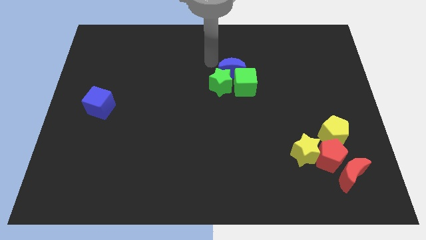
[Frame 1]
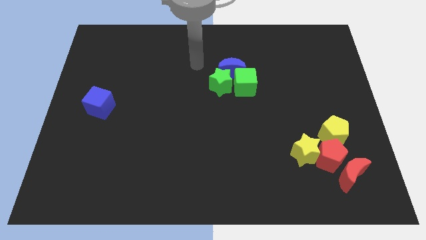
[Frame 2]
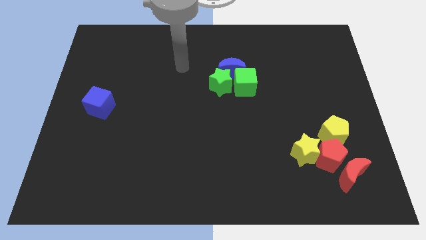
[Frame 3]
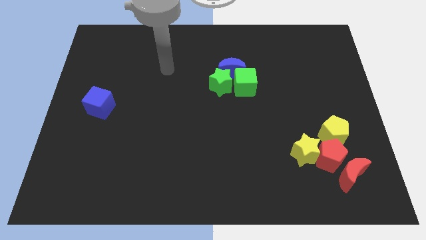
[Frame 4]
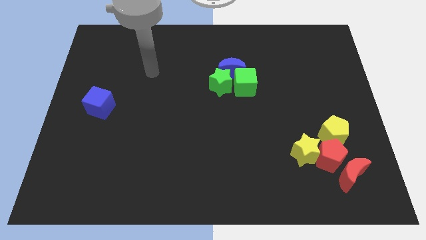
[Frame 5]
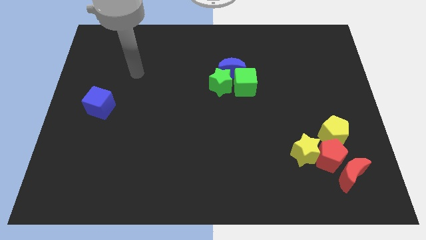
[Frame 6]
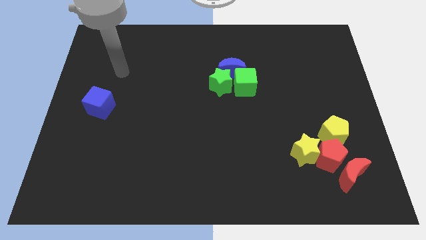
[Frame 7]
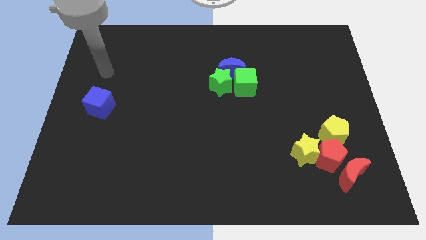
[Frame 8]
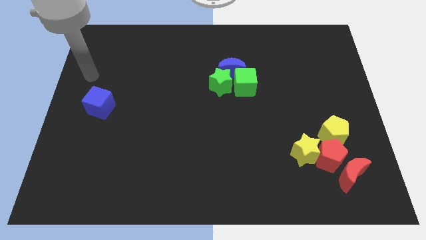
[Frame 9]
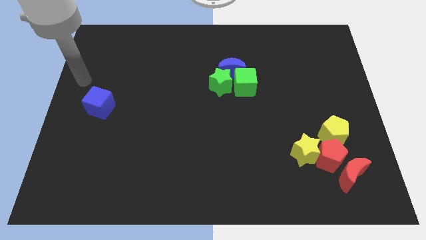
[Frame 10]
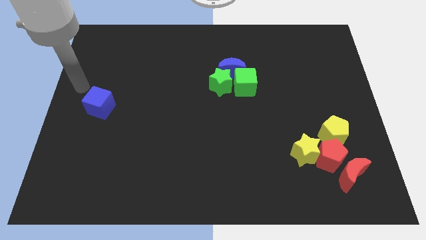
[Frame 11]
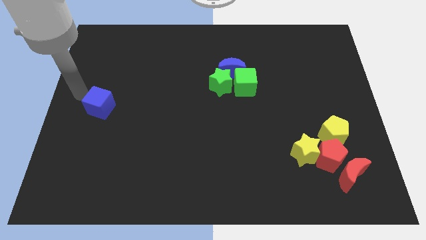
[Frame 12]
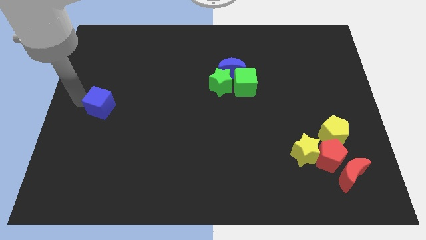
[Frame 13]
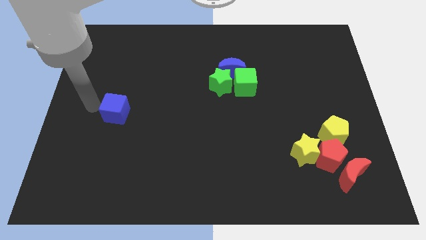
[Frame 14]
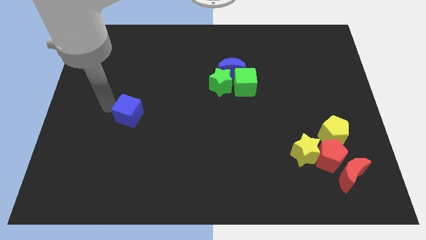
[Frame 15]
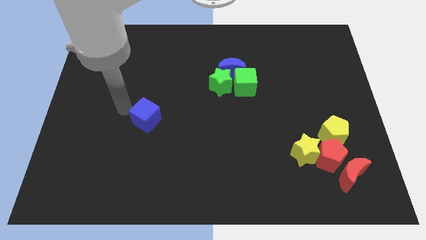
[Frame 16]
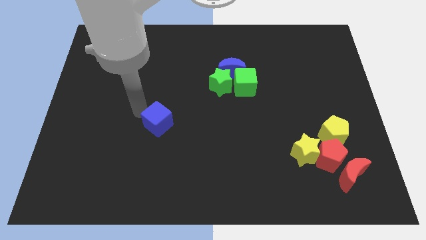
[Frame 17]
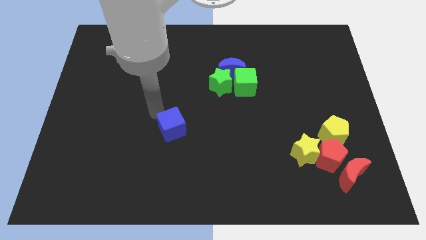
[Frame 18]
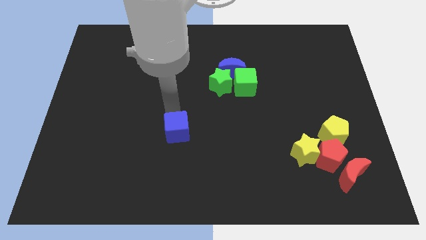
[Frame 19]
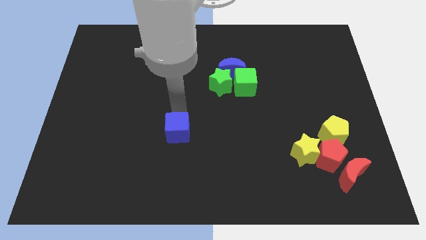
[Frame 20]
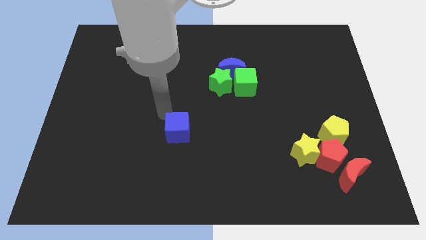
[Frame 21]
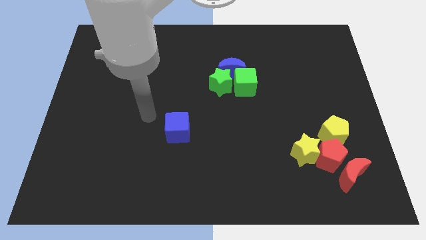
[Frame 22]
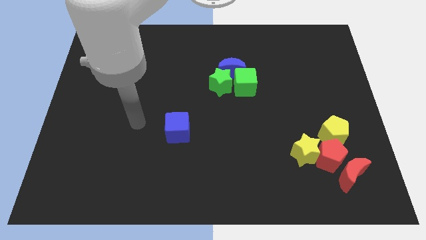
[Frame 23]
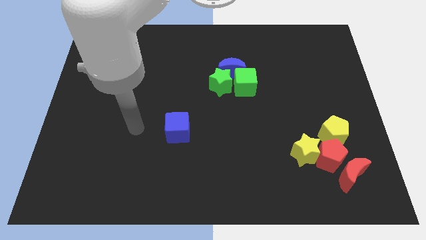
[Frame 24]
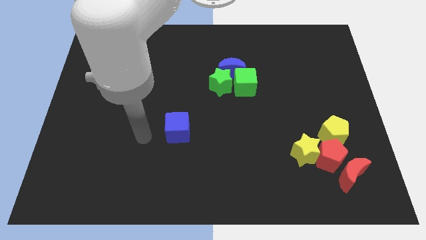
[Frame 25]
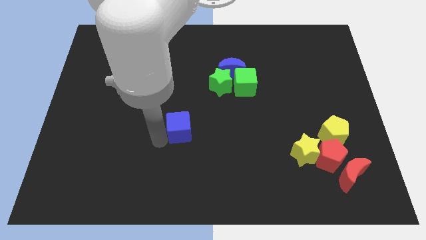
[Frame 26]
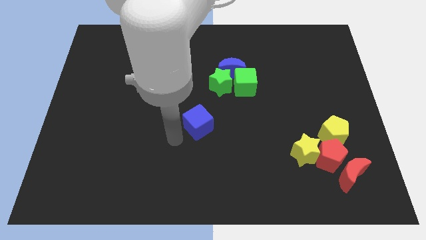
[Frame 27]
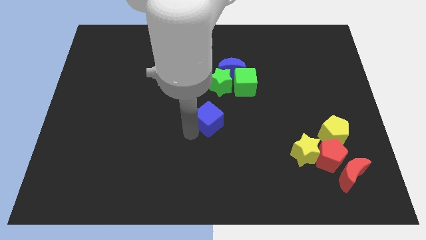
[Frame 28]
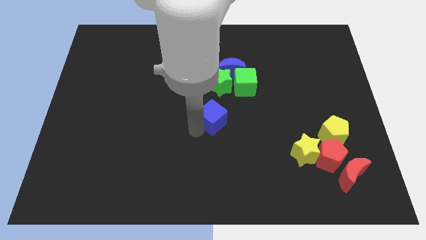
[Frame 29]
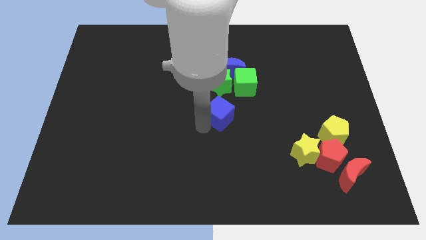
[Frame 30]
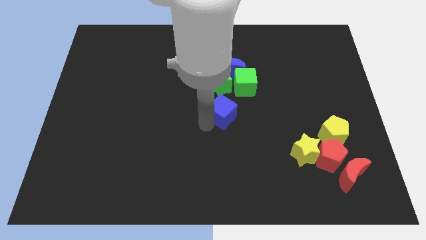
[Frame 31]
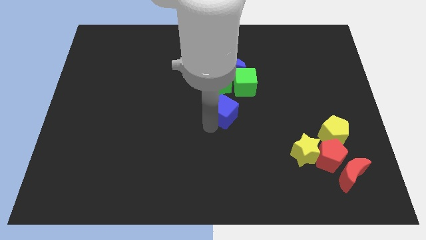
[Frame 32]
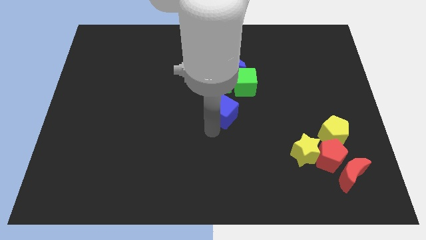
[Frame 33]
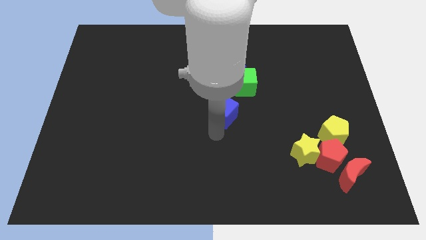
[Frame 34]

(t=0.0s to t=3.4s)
place the blue cube below the green blocks

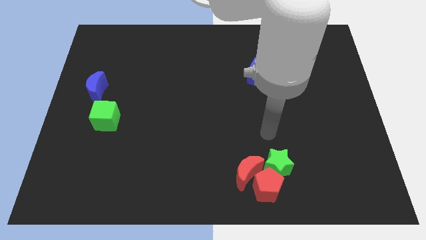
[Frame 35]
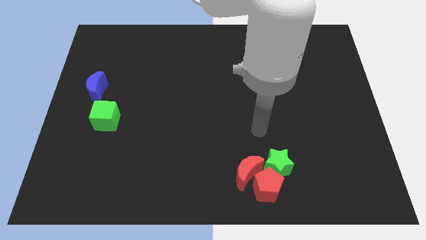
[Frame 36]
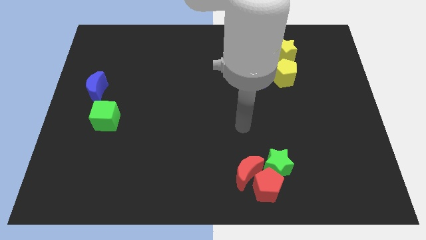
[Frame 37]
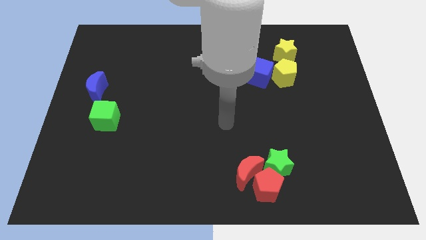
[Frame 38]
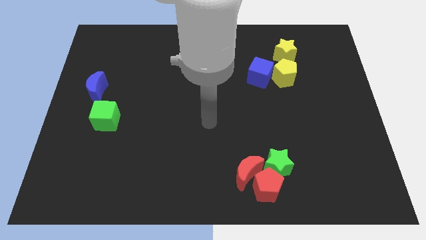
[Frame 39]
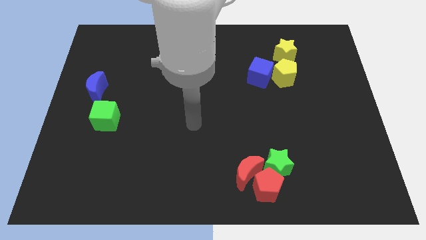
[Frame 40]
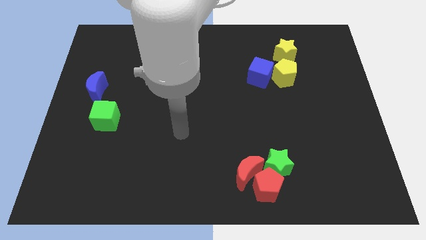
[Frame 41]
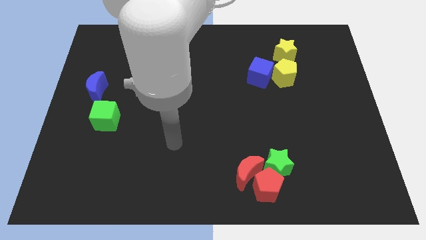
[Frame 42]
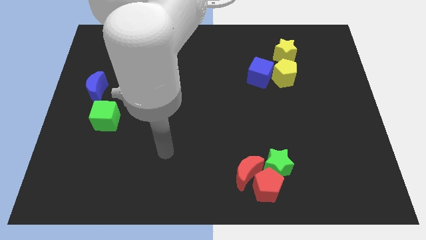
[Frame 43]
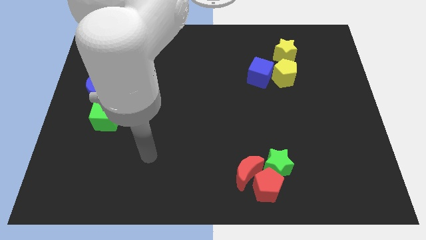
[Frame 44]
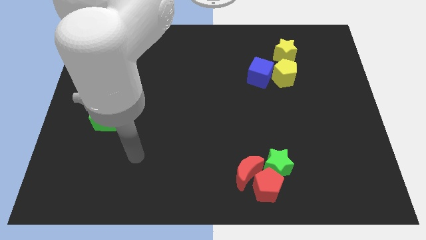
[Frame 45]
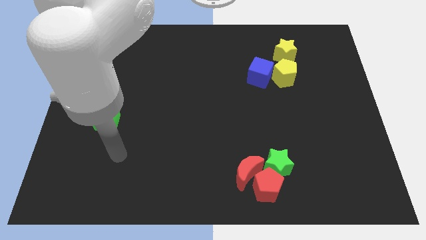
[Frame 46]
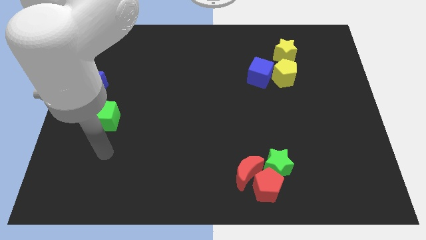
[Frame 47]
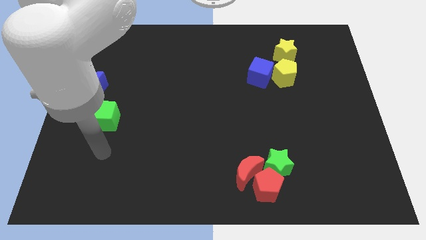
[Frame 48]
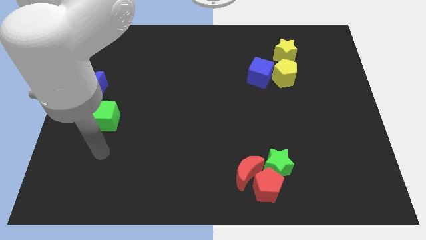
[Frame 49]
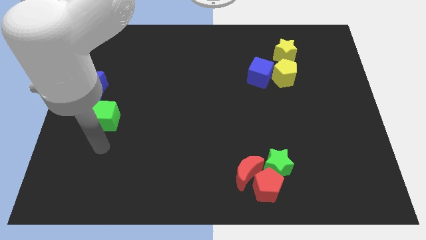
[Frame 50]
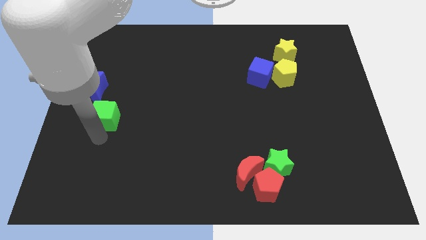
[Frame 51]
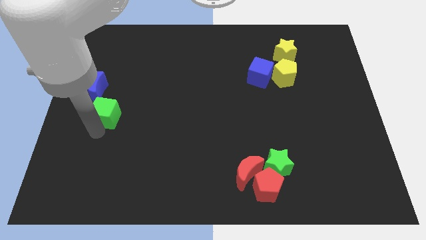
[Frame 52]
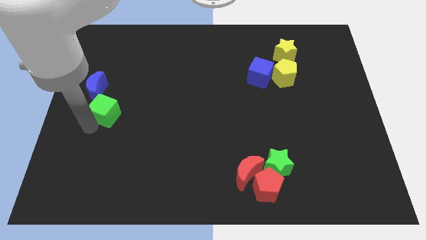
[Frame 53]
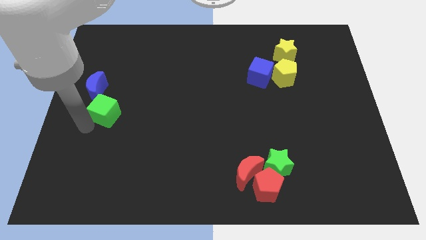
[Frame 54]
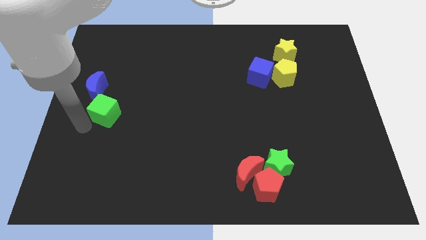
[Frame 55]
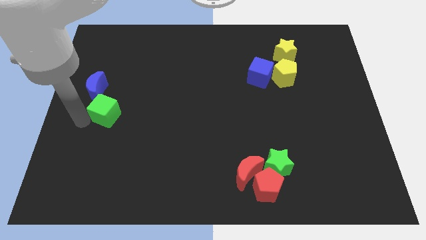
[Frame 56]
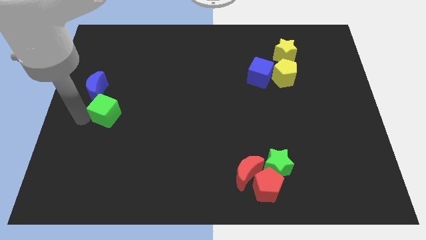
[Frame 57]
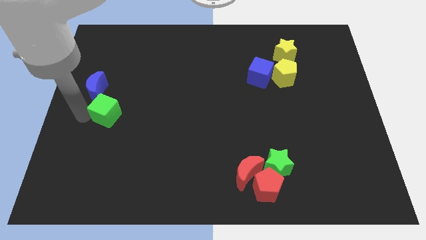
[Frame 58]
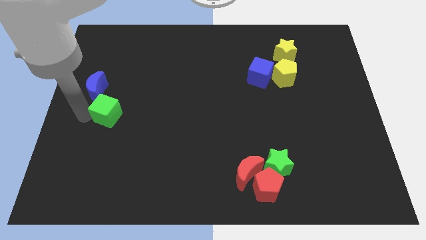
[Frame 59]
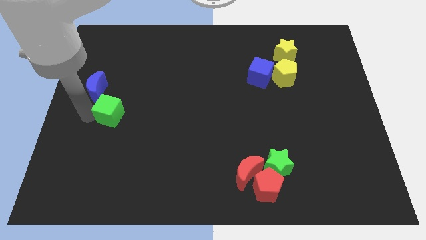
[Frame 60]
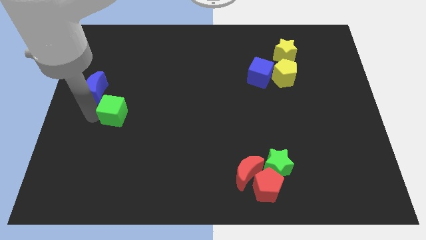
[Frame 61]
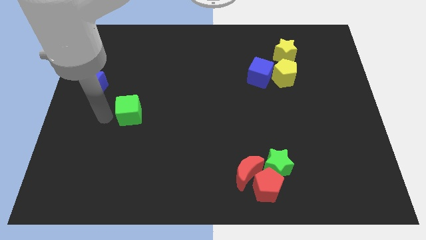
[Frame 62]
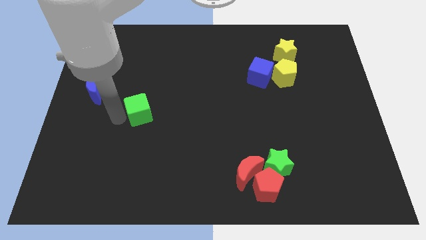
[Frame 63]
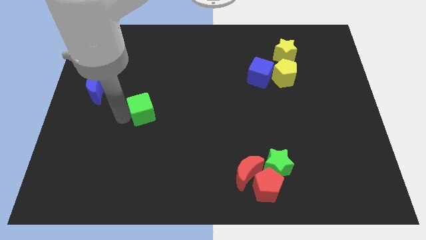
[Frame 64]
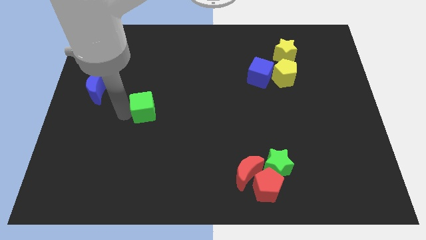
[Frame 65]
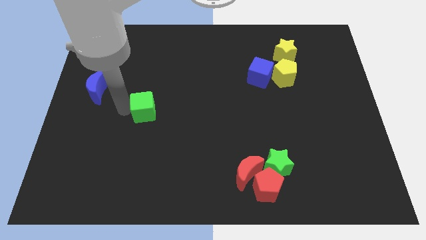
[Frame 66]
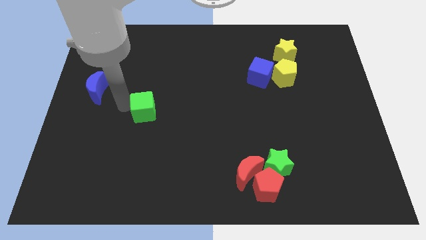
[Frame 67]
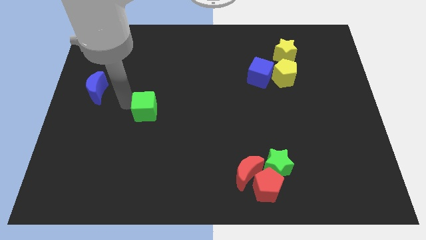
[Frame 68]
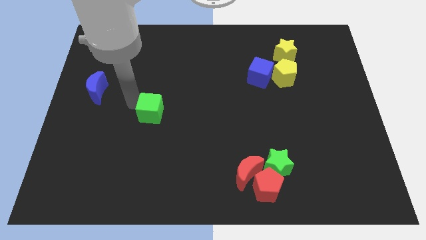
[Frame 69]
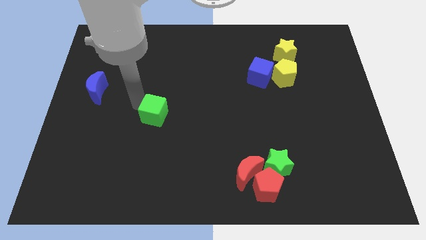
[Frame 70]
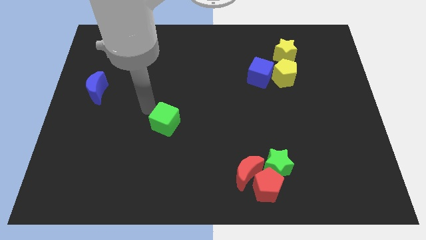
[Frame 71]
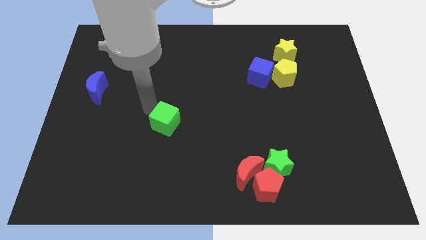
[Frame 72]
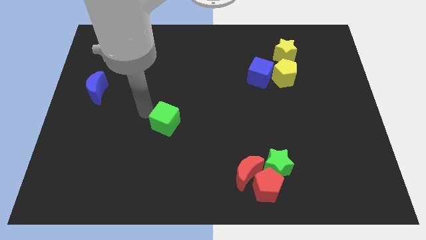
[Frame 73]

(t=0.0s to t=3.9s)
move the green cube to the center of the board

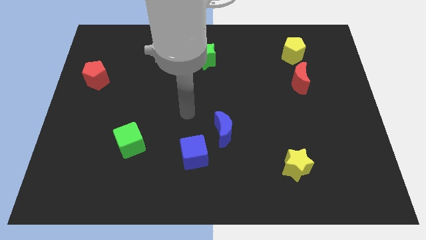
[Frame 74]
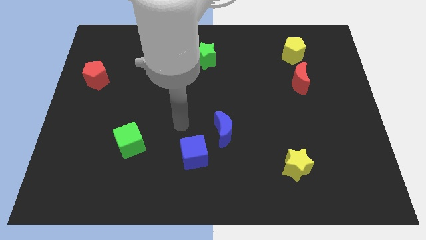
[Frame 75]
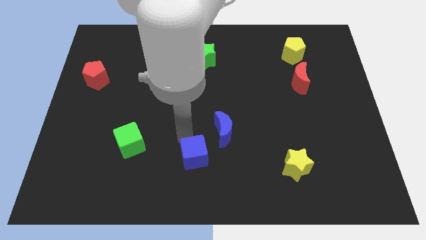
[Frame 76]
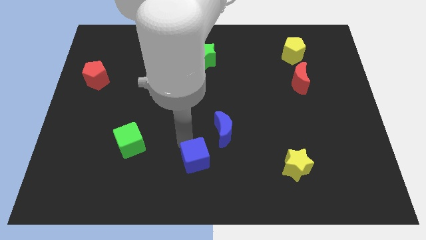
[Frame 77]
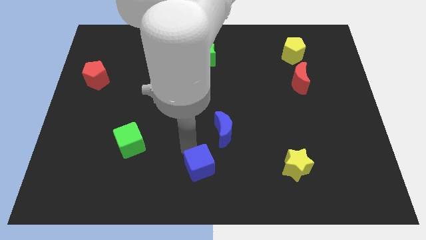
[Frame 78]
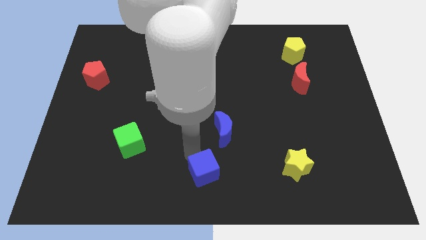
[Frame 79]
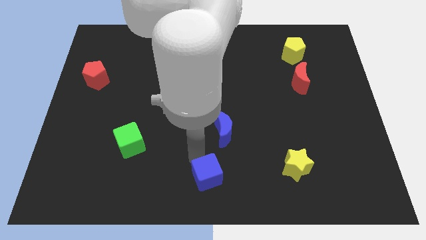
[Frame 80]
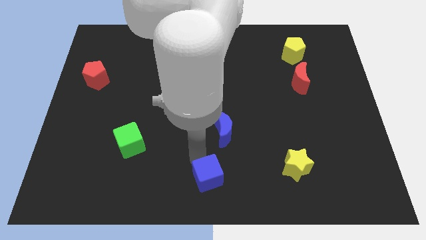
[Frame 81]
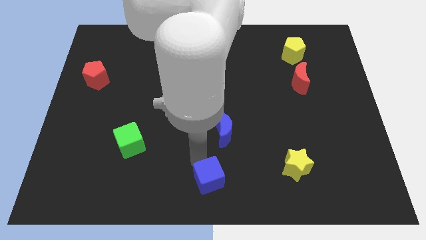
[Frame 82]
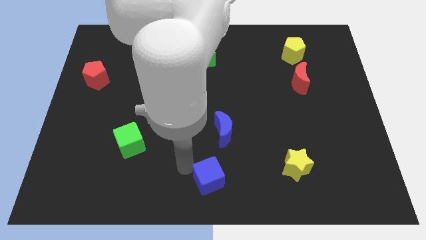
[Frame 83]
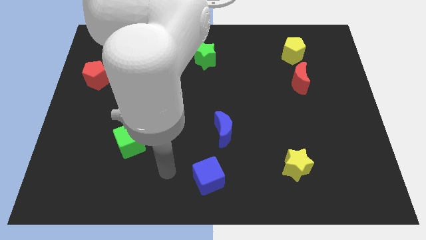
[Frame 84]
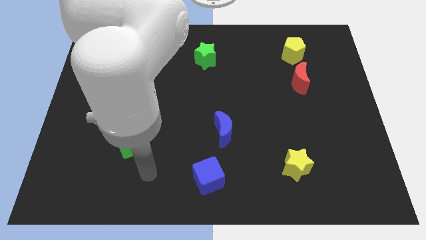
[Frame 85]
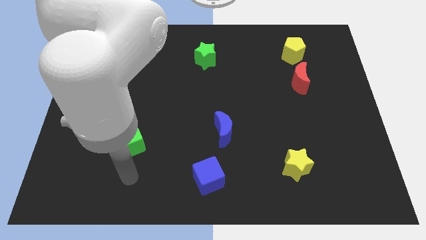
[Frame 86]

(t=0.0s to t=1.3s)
move the blue cube to the bottom side of the blue moon

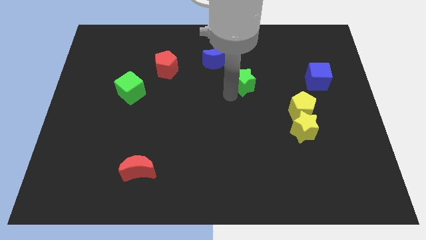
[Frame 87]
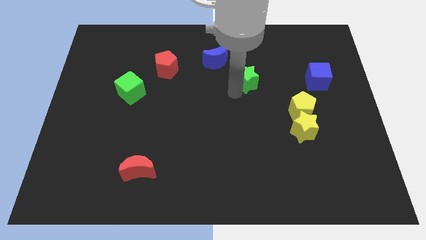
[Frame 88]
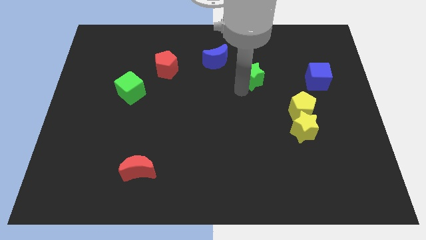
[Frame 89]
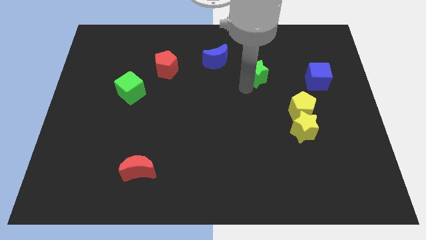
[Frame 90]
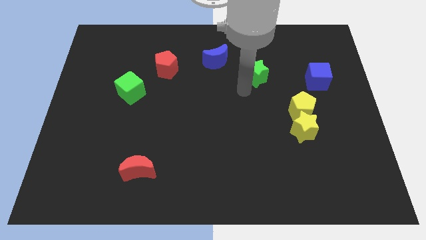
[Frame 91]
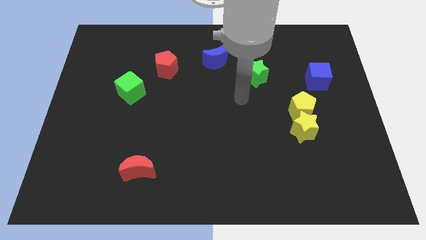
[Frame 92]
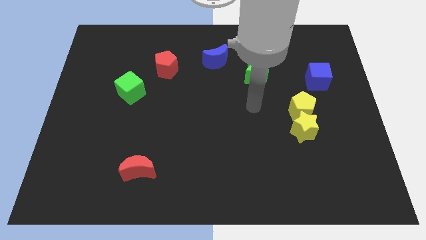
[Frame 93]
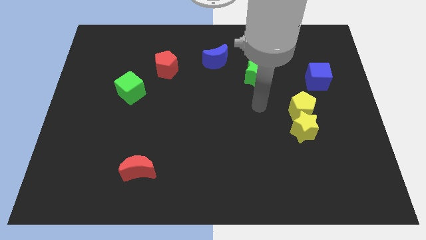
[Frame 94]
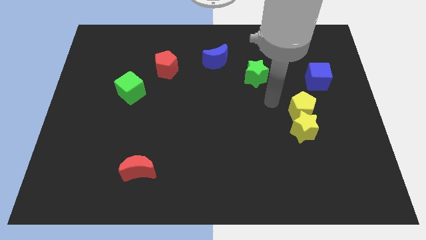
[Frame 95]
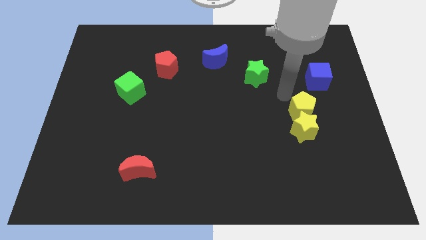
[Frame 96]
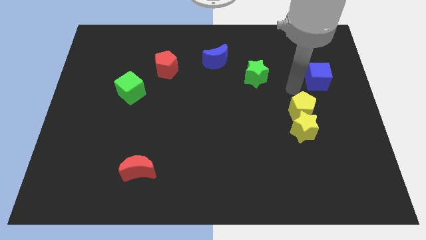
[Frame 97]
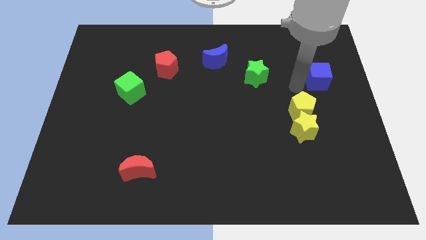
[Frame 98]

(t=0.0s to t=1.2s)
push the green star to the left of the blue cube
